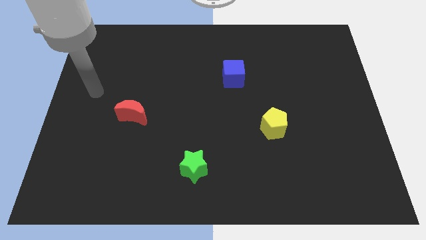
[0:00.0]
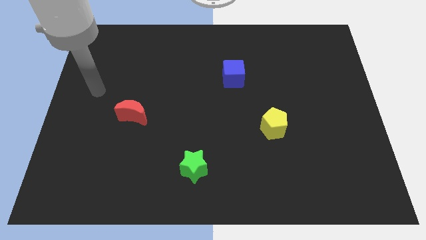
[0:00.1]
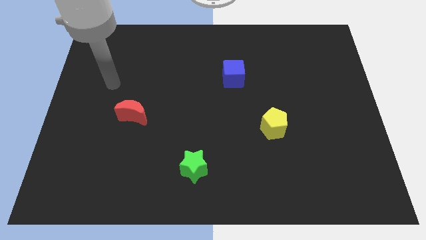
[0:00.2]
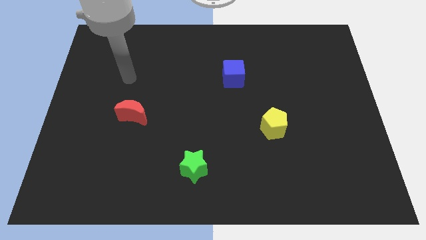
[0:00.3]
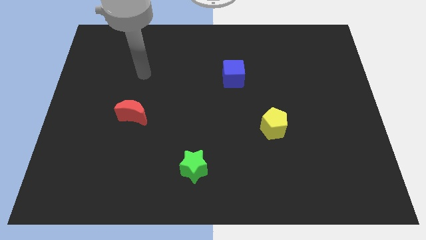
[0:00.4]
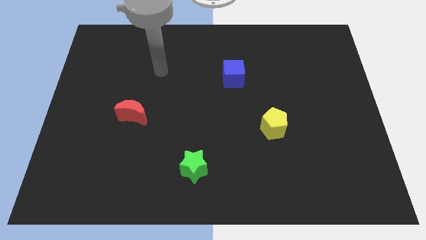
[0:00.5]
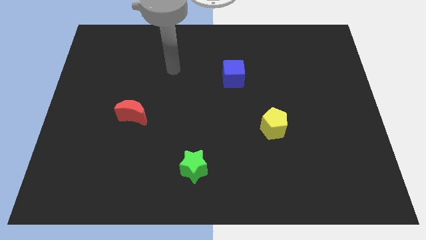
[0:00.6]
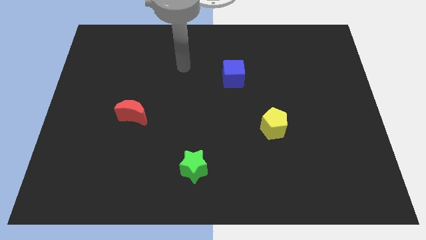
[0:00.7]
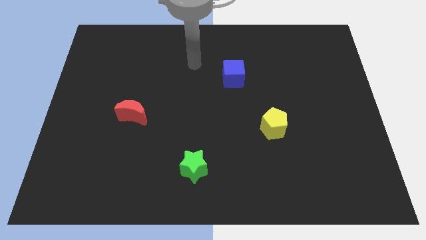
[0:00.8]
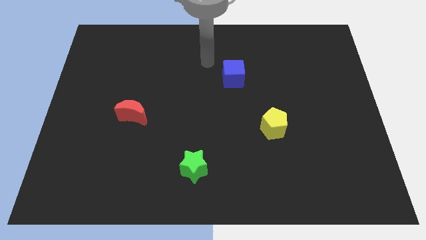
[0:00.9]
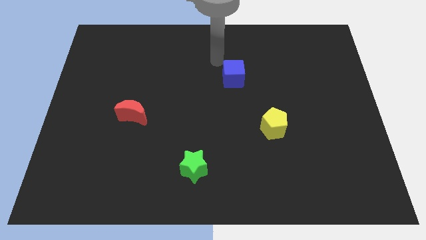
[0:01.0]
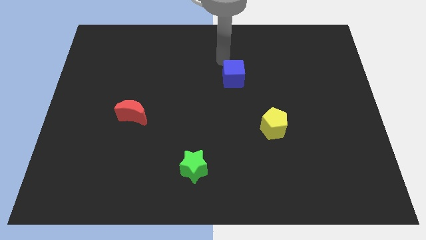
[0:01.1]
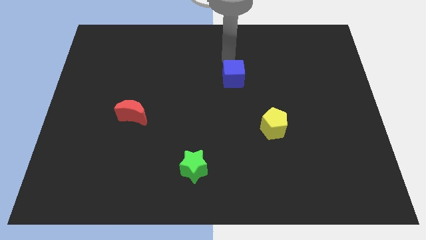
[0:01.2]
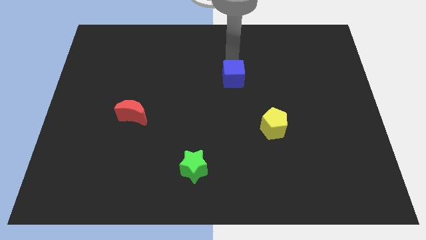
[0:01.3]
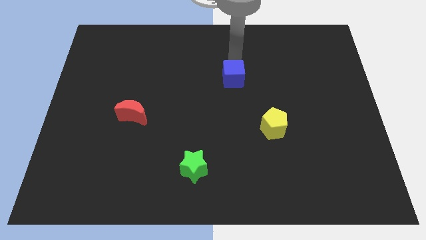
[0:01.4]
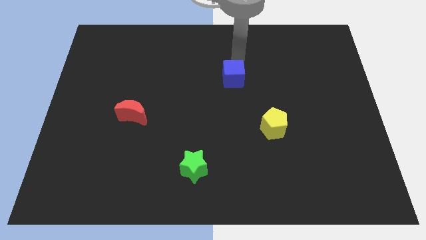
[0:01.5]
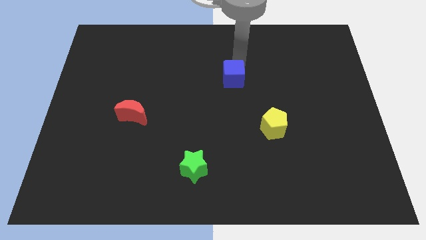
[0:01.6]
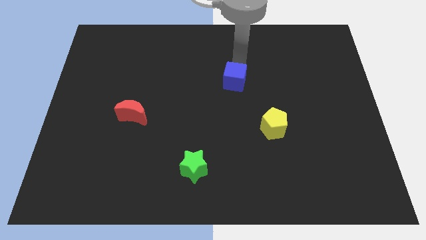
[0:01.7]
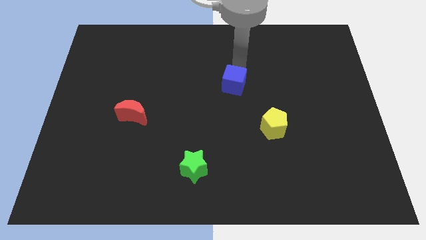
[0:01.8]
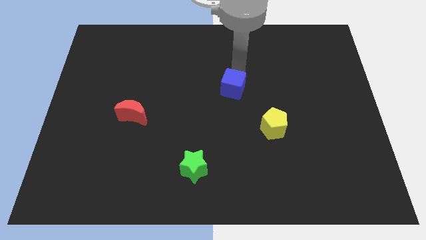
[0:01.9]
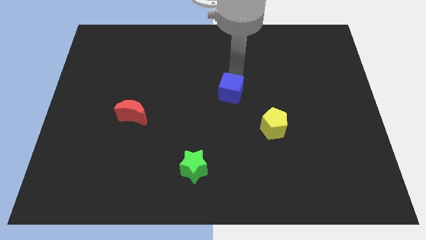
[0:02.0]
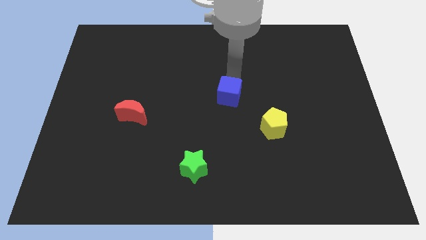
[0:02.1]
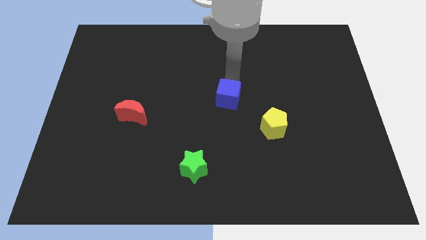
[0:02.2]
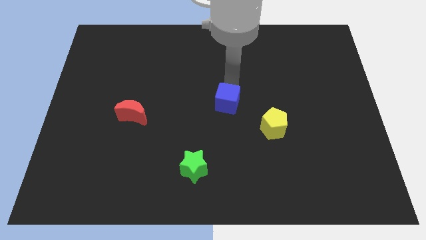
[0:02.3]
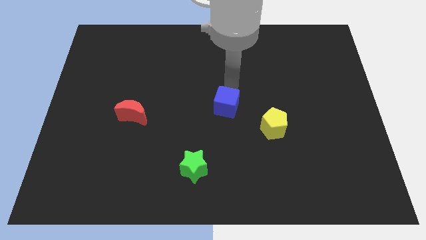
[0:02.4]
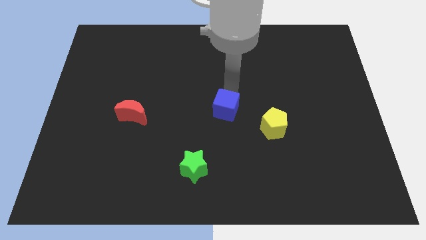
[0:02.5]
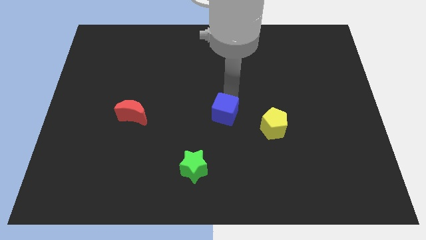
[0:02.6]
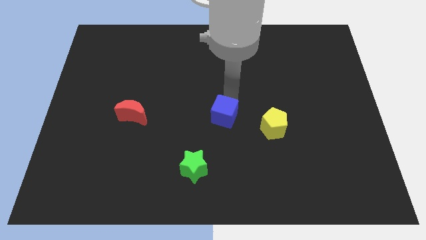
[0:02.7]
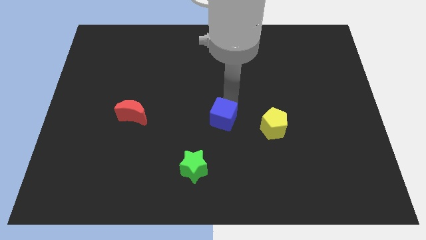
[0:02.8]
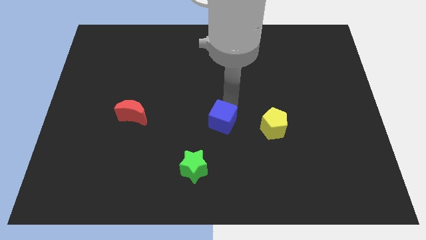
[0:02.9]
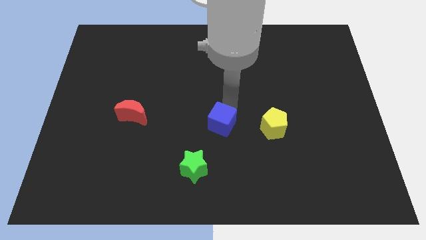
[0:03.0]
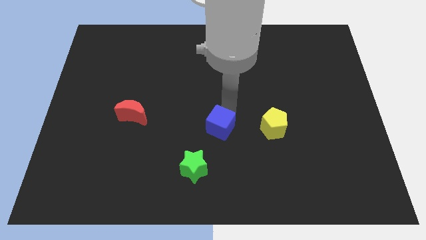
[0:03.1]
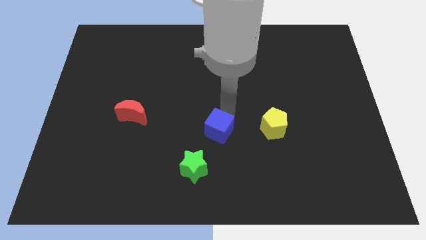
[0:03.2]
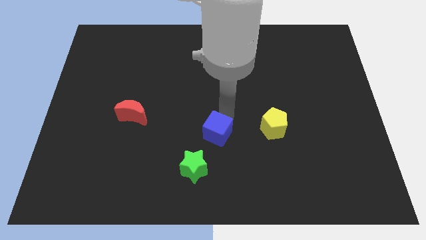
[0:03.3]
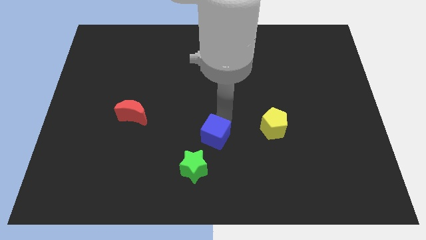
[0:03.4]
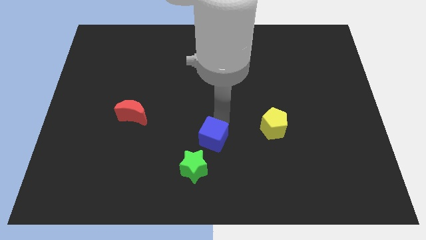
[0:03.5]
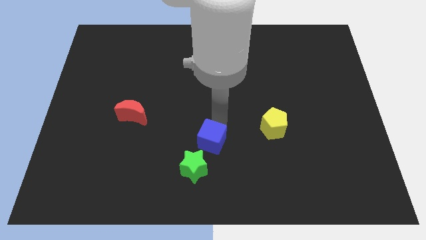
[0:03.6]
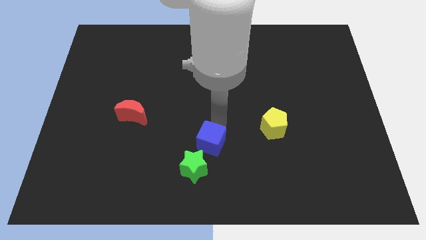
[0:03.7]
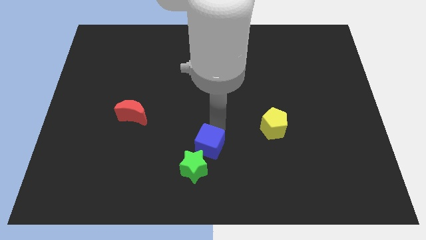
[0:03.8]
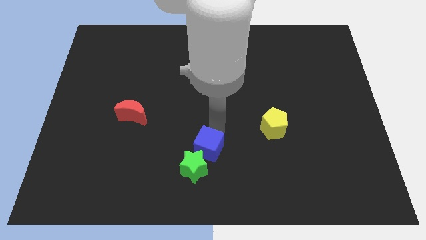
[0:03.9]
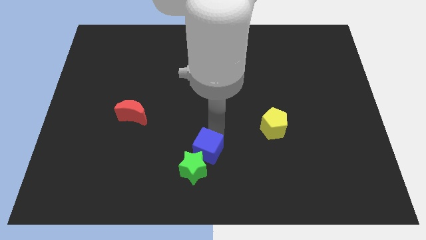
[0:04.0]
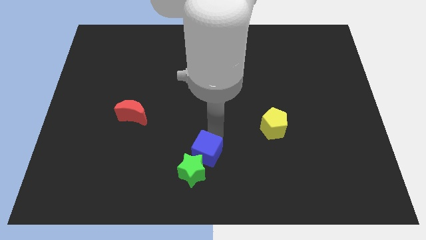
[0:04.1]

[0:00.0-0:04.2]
move the cube close to the green block

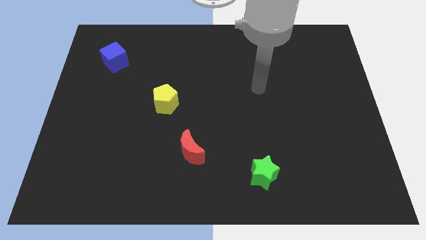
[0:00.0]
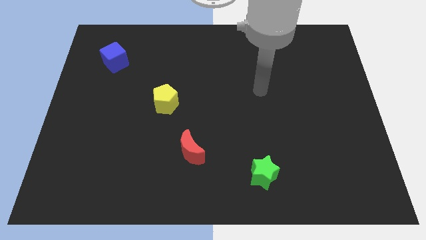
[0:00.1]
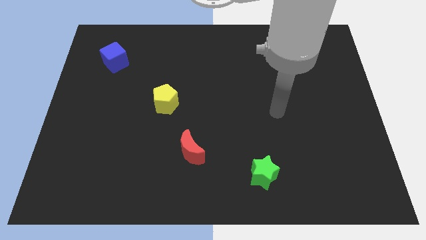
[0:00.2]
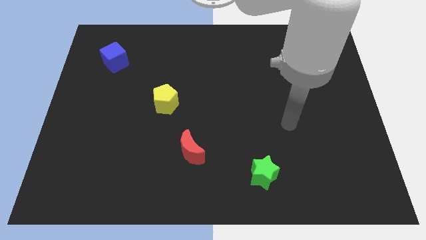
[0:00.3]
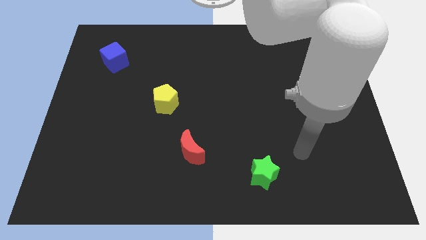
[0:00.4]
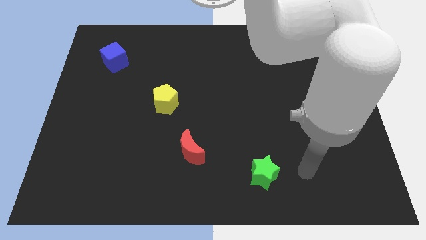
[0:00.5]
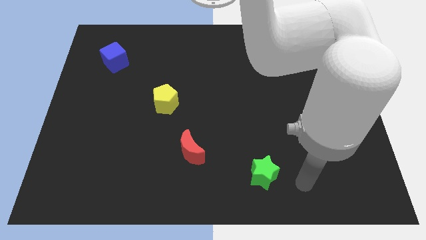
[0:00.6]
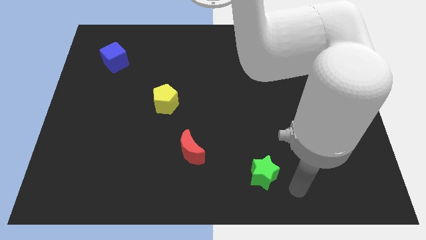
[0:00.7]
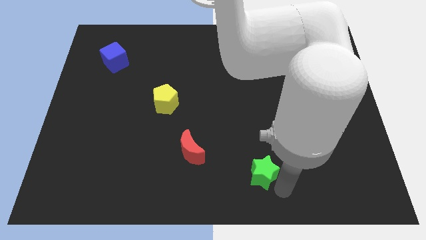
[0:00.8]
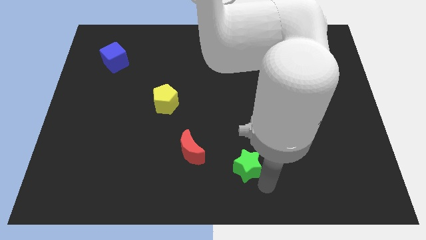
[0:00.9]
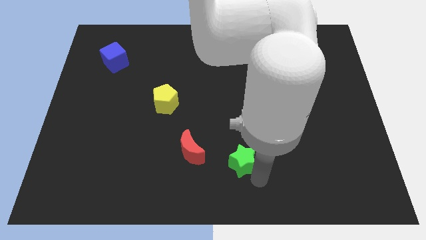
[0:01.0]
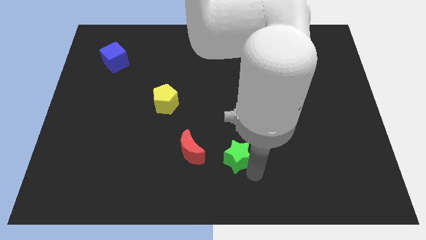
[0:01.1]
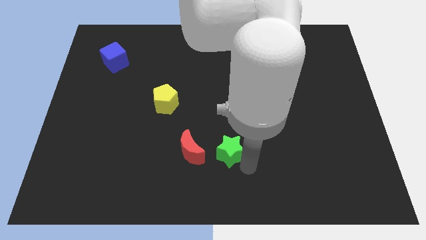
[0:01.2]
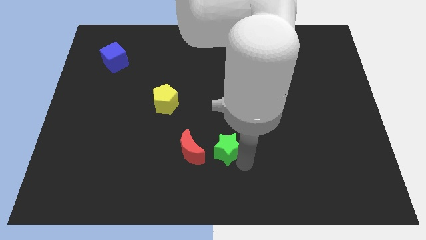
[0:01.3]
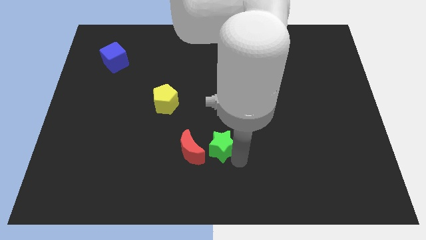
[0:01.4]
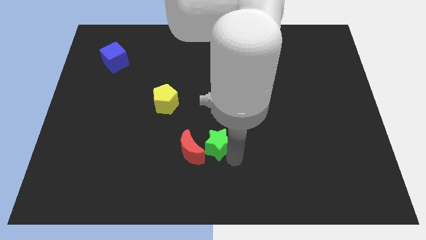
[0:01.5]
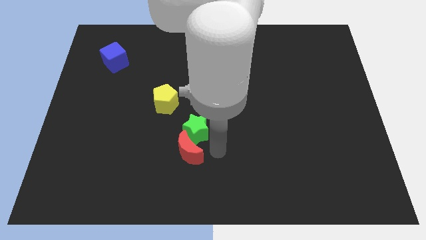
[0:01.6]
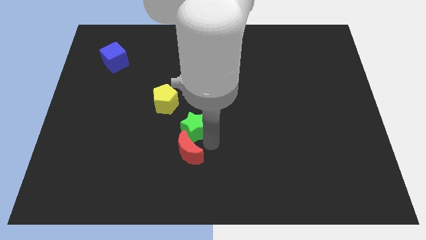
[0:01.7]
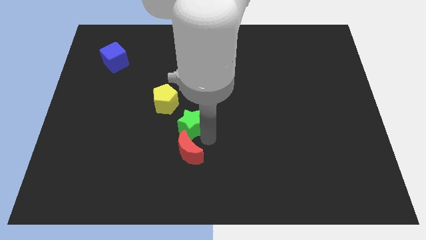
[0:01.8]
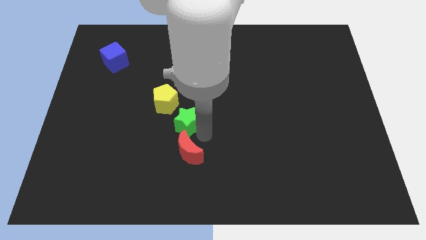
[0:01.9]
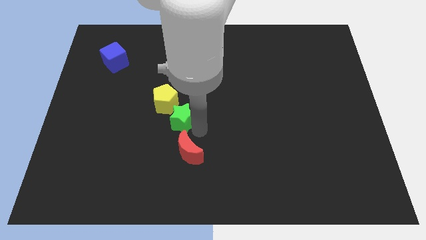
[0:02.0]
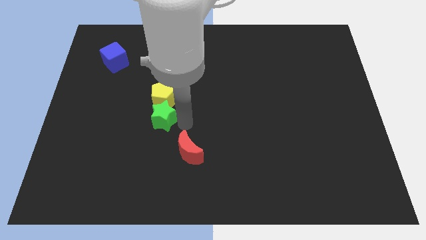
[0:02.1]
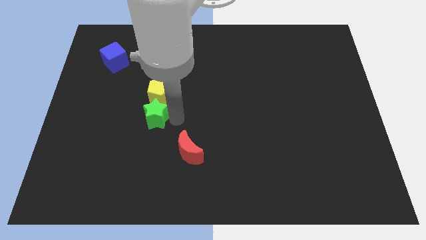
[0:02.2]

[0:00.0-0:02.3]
put the green star towards the yellow pentagon

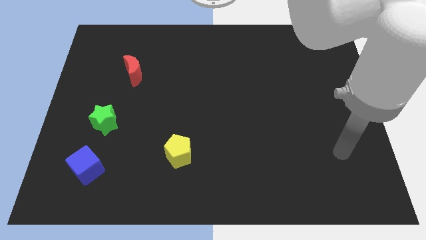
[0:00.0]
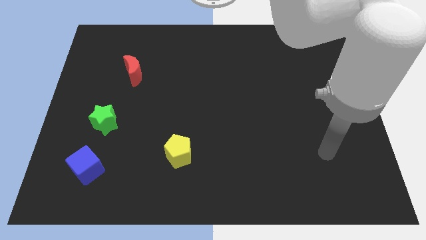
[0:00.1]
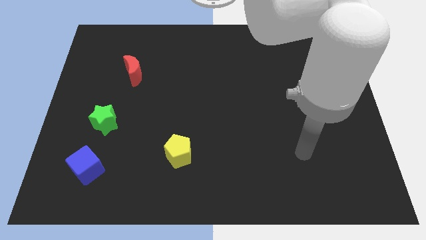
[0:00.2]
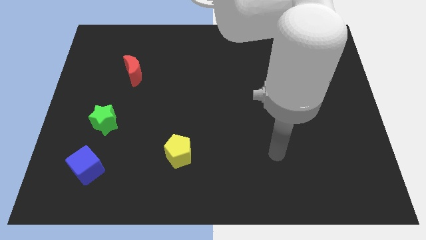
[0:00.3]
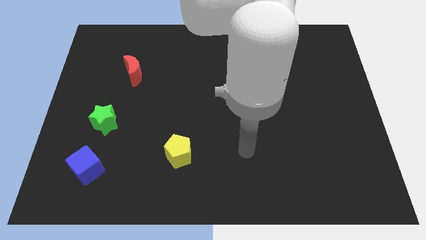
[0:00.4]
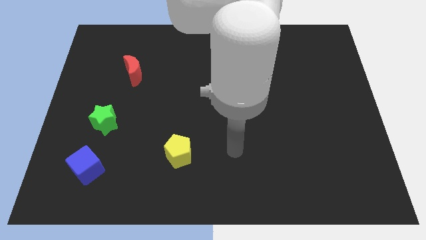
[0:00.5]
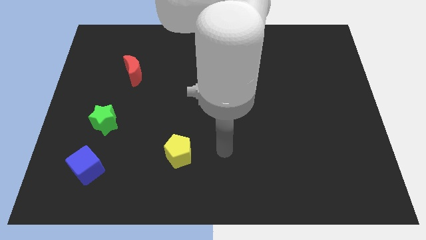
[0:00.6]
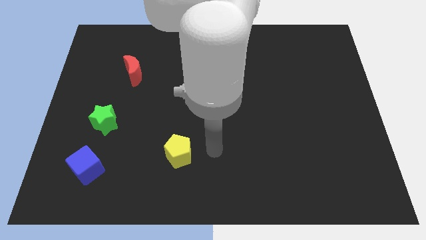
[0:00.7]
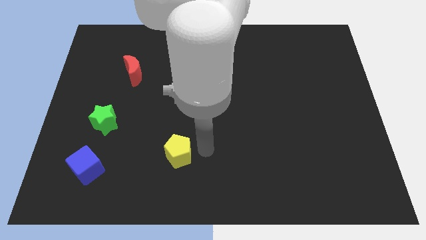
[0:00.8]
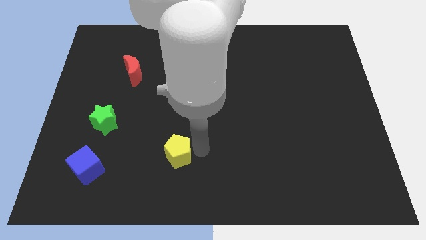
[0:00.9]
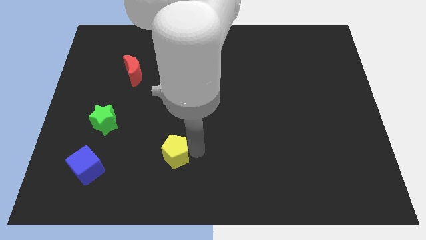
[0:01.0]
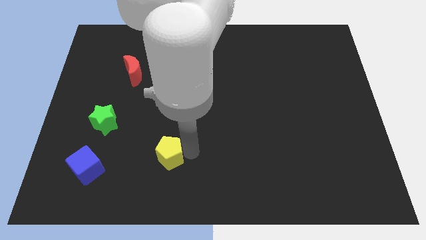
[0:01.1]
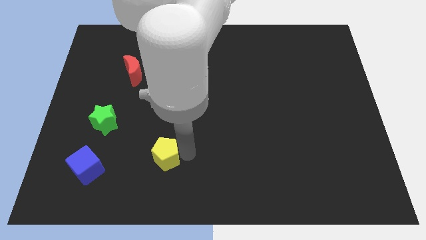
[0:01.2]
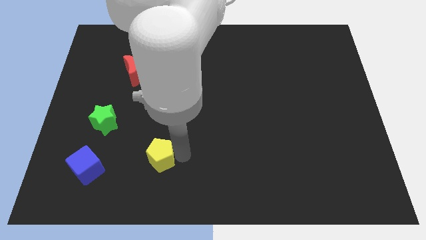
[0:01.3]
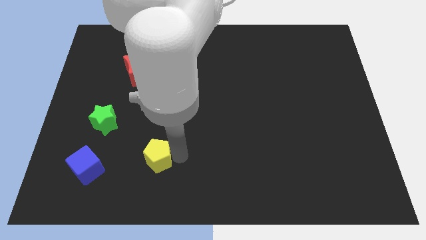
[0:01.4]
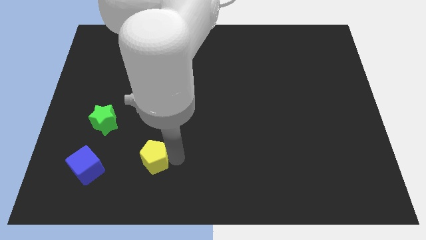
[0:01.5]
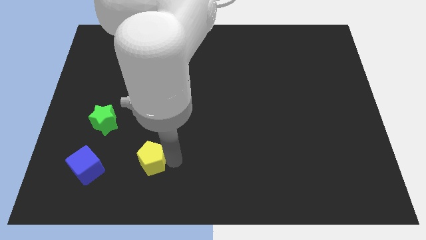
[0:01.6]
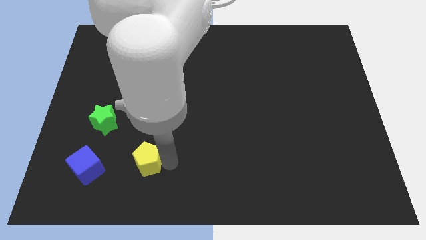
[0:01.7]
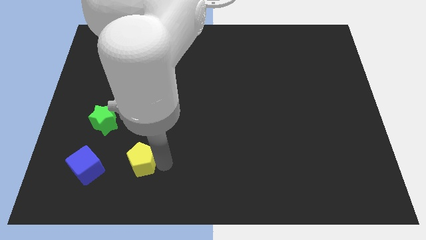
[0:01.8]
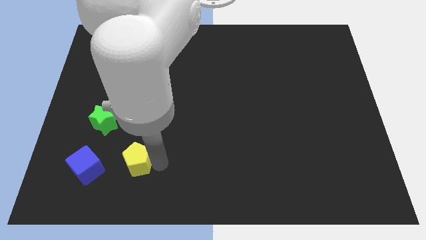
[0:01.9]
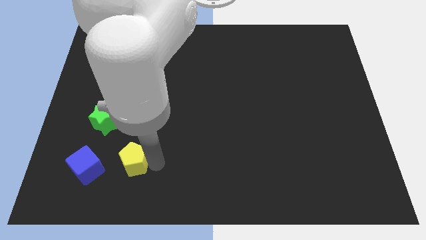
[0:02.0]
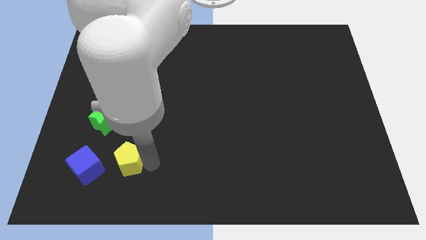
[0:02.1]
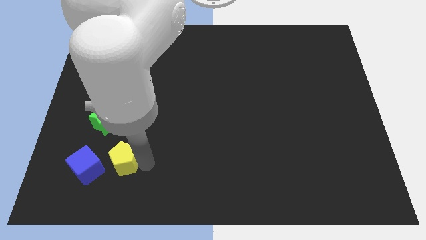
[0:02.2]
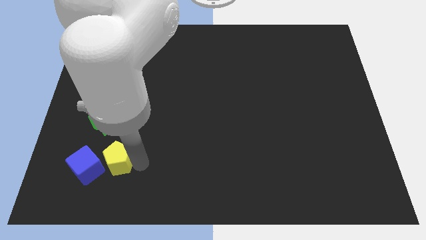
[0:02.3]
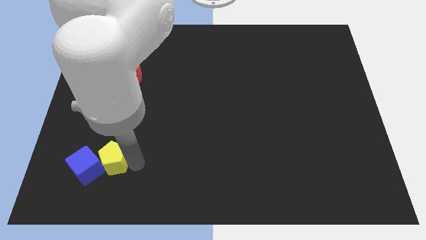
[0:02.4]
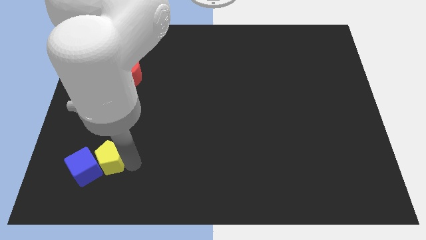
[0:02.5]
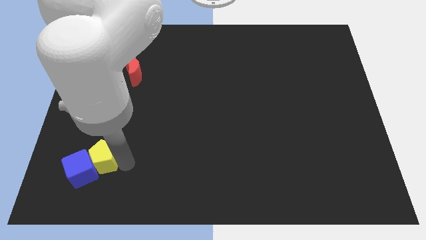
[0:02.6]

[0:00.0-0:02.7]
slide the yellow block next to the cube
